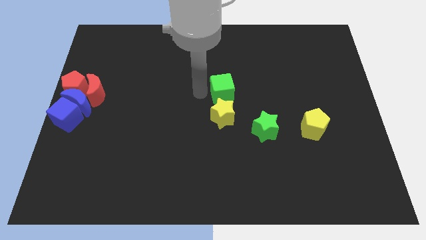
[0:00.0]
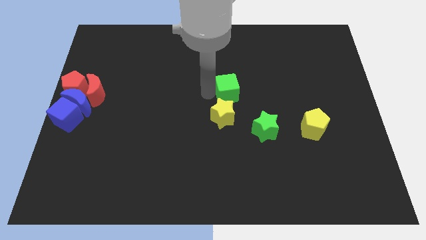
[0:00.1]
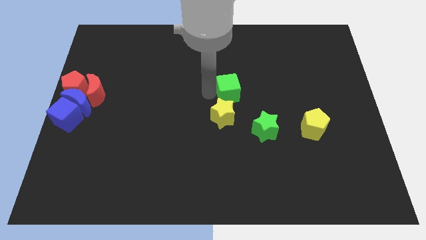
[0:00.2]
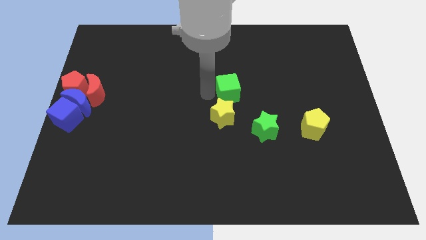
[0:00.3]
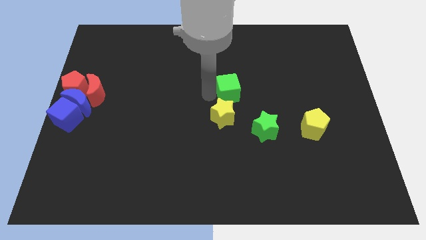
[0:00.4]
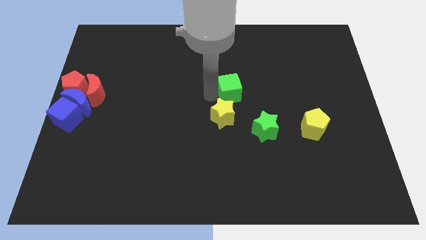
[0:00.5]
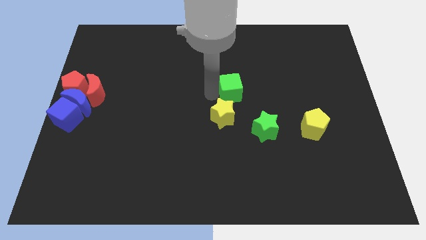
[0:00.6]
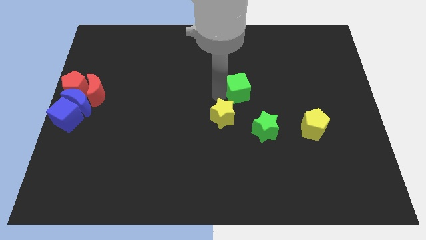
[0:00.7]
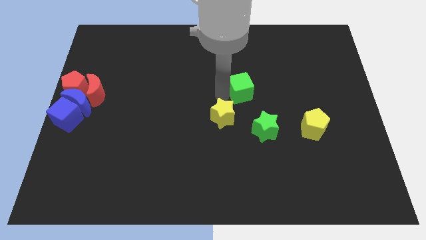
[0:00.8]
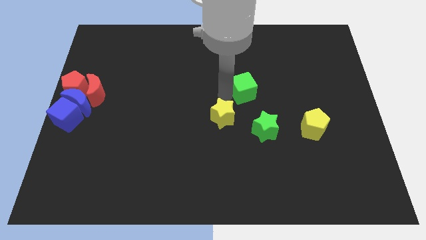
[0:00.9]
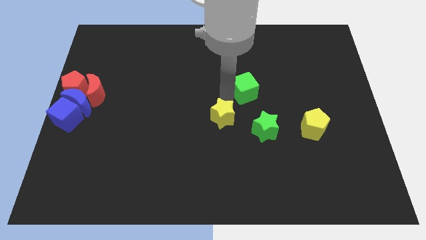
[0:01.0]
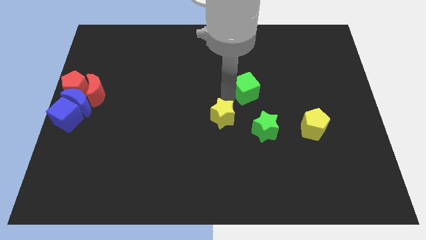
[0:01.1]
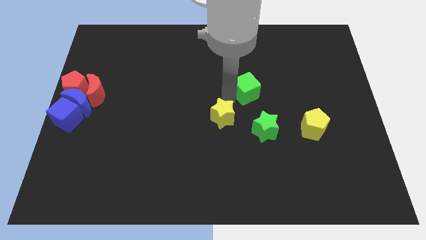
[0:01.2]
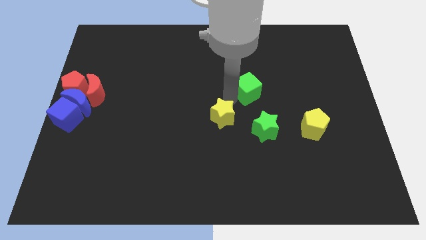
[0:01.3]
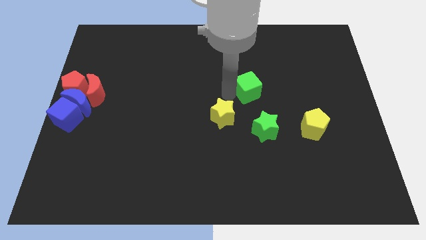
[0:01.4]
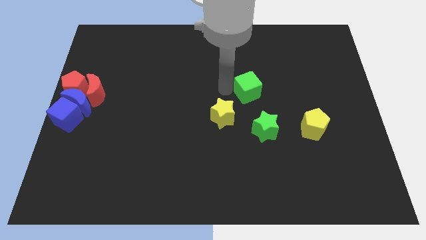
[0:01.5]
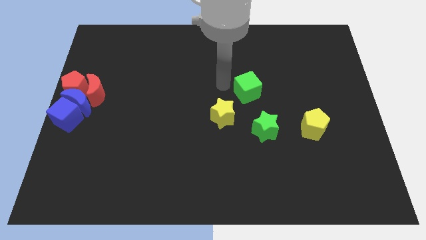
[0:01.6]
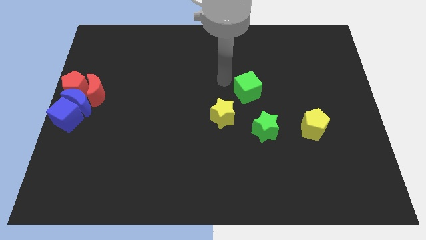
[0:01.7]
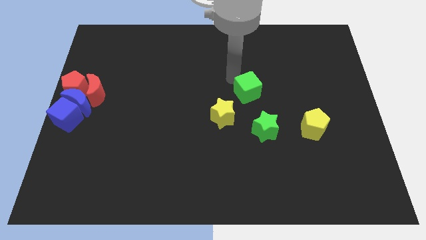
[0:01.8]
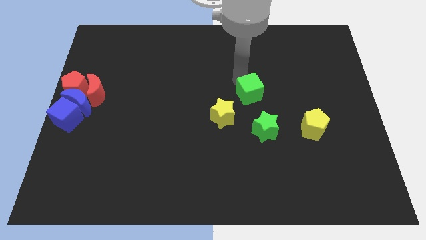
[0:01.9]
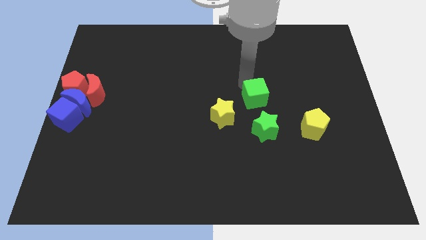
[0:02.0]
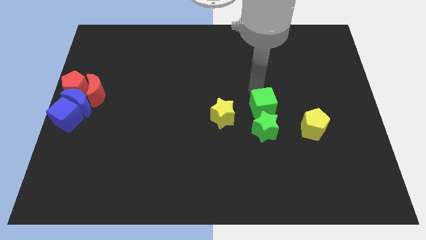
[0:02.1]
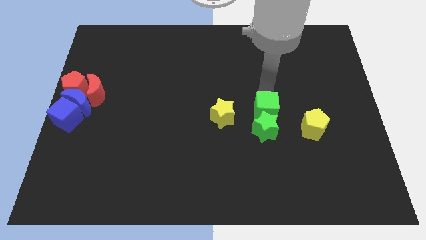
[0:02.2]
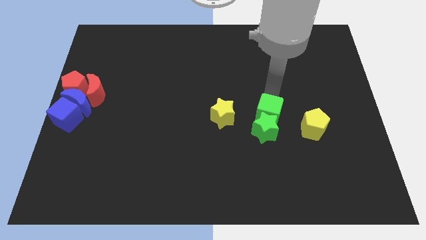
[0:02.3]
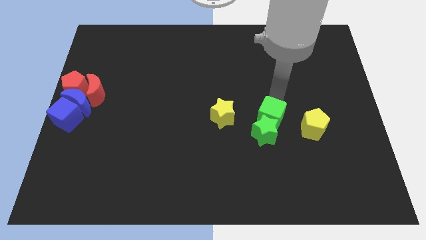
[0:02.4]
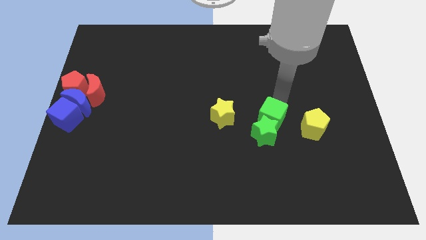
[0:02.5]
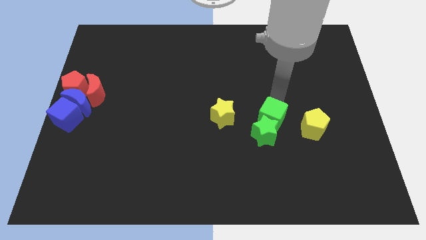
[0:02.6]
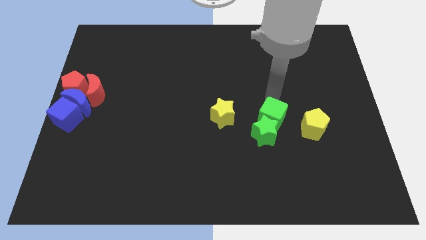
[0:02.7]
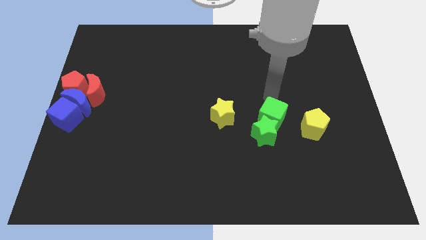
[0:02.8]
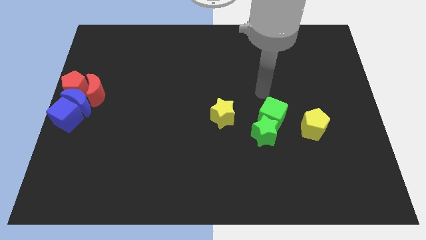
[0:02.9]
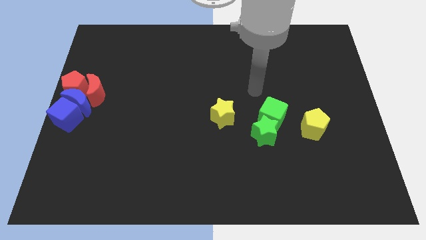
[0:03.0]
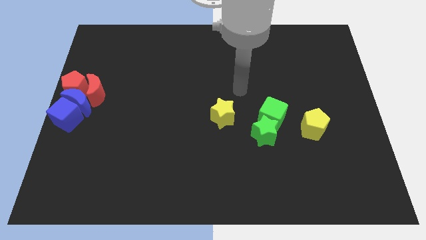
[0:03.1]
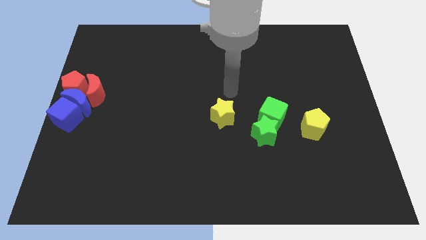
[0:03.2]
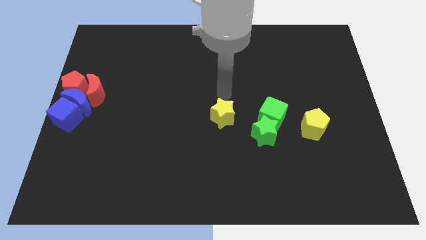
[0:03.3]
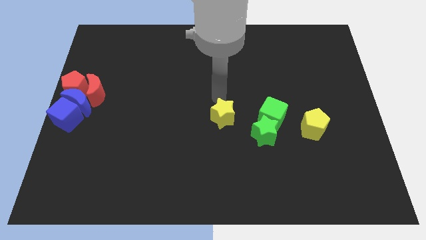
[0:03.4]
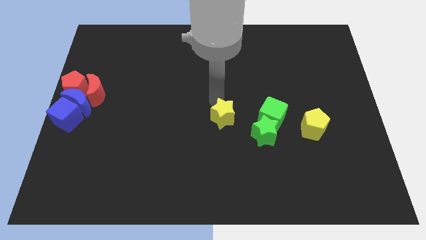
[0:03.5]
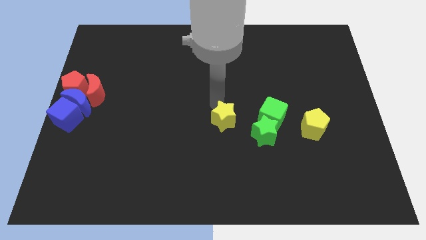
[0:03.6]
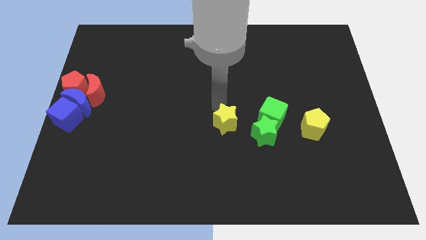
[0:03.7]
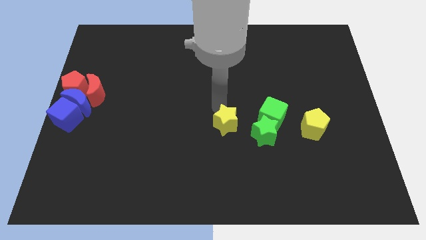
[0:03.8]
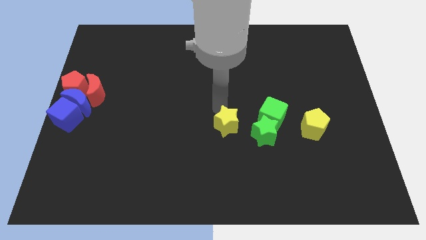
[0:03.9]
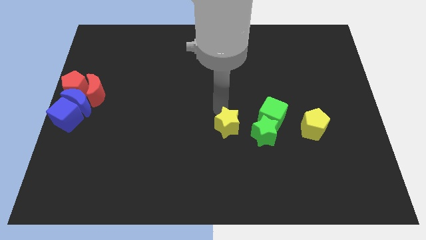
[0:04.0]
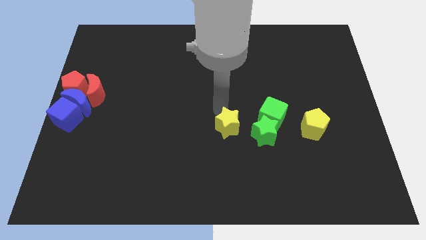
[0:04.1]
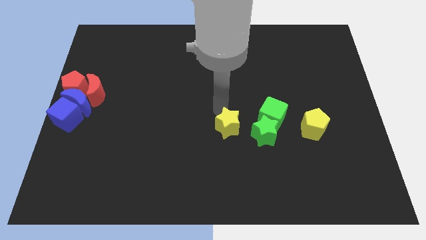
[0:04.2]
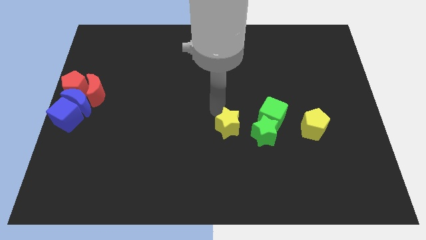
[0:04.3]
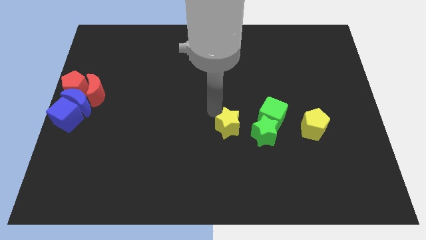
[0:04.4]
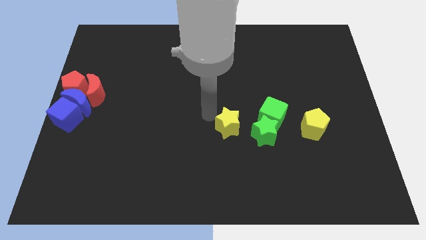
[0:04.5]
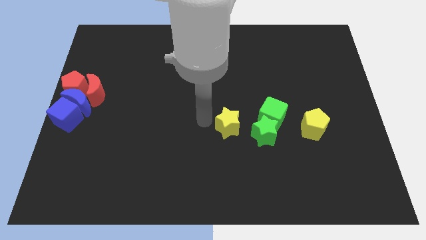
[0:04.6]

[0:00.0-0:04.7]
place green cube at the top right of green star

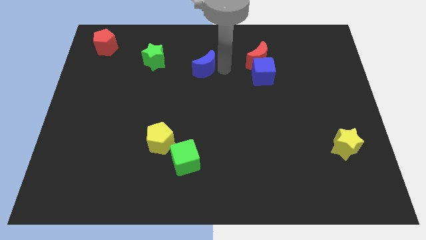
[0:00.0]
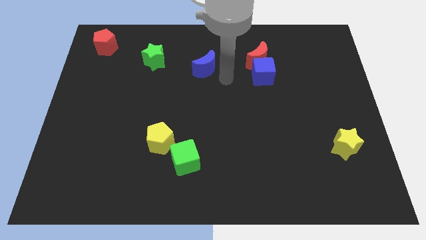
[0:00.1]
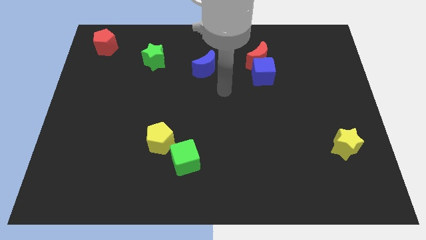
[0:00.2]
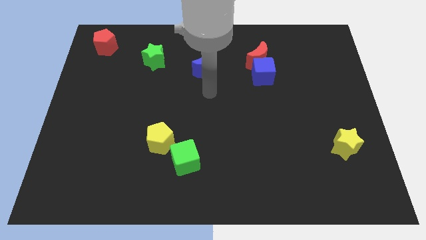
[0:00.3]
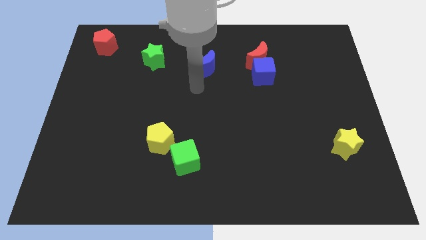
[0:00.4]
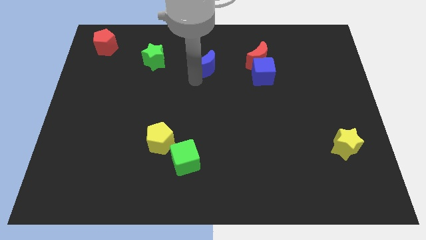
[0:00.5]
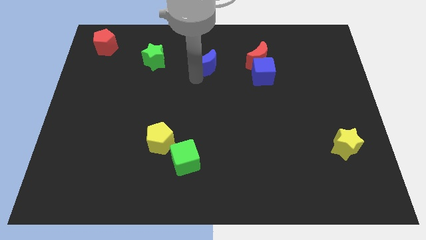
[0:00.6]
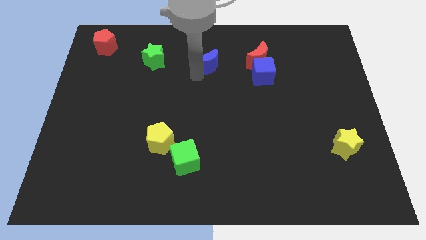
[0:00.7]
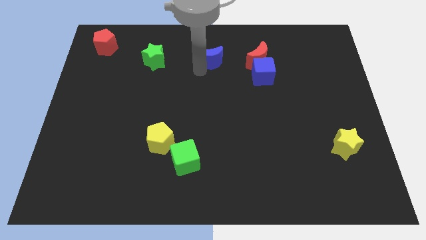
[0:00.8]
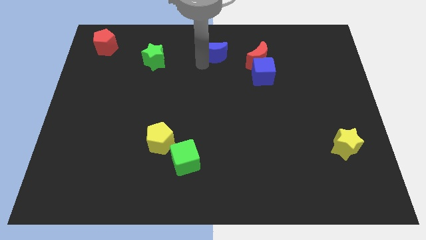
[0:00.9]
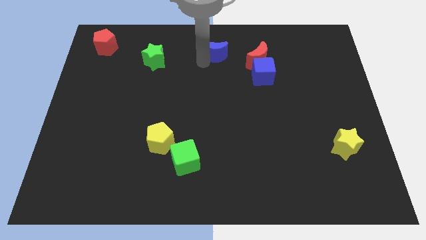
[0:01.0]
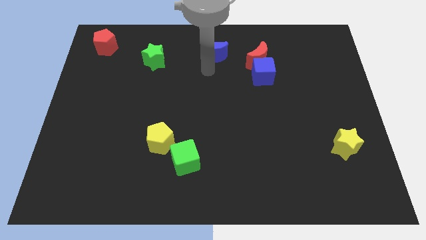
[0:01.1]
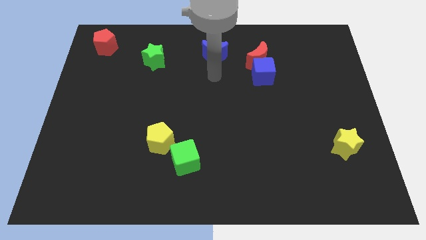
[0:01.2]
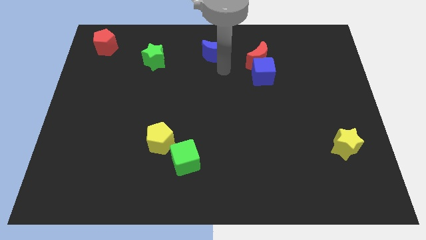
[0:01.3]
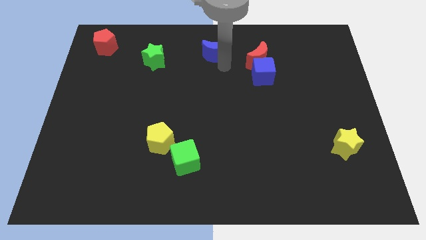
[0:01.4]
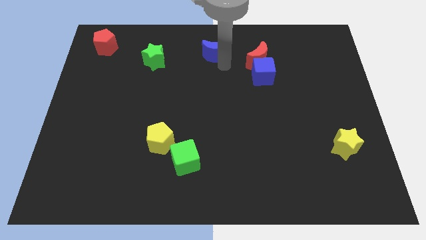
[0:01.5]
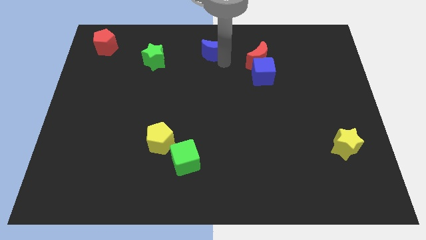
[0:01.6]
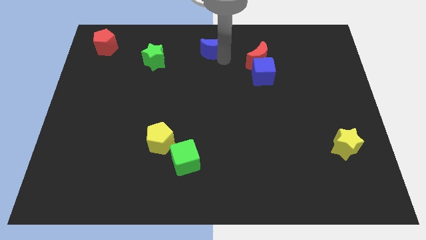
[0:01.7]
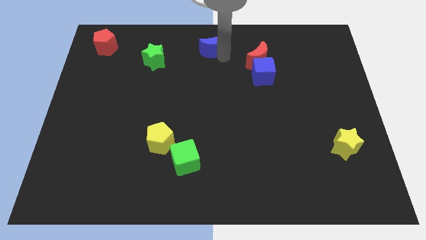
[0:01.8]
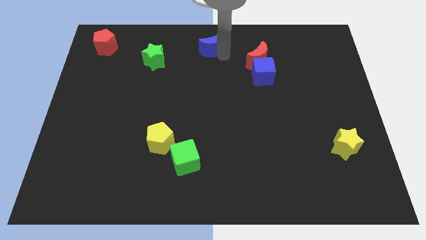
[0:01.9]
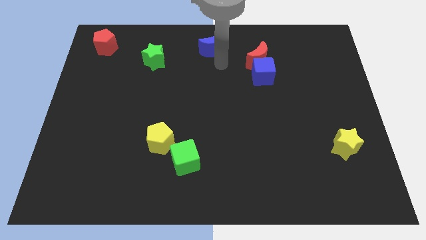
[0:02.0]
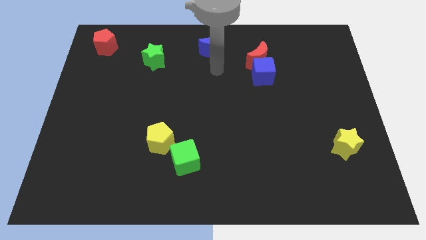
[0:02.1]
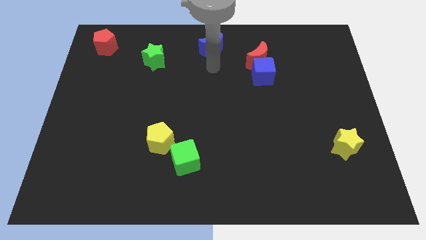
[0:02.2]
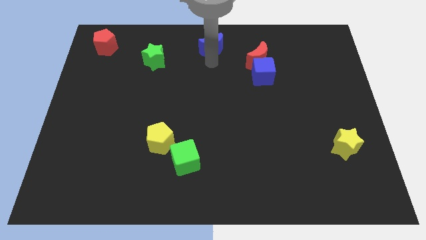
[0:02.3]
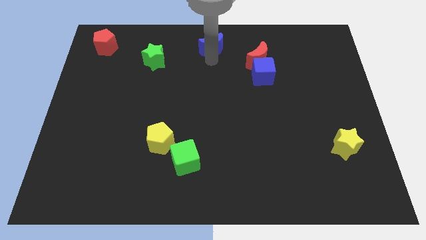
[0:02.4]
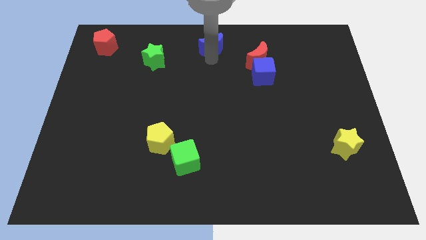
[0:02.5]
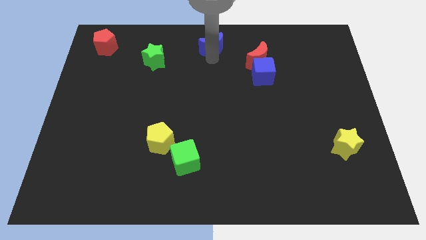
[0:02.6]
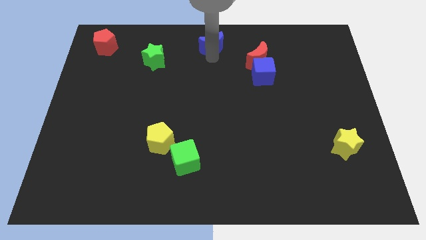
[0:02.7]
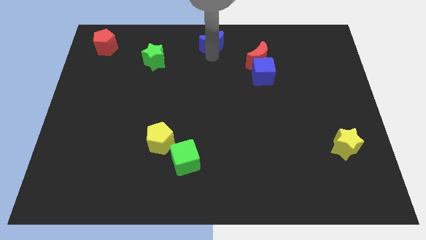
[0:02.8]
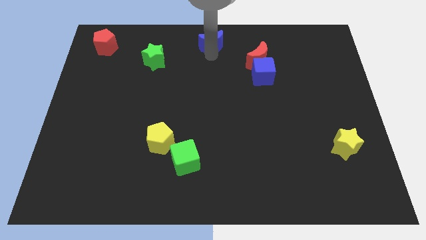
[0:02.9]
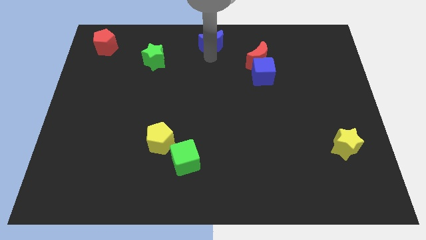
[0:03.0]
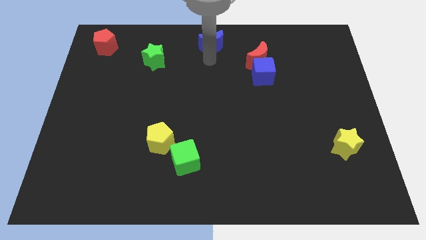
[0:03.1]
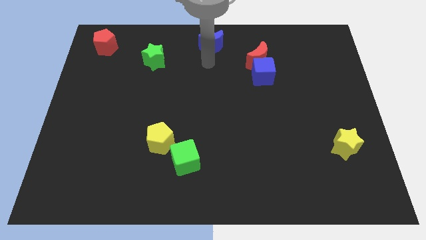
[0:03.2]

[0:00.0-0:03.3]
move the blue crescent to the top center of the board

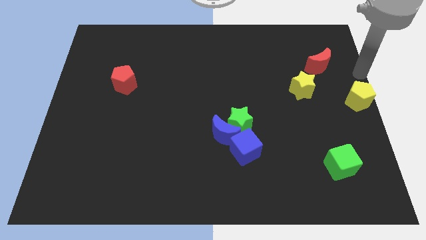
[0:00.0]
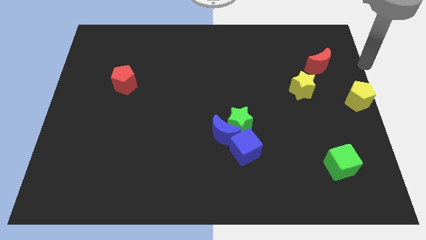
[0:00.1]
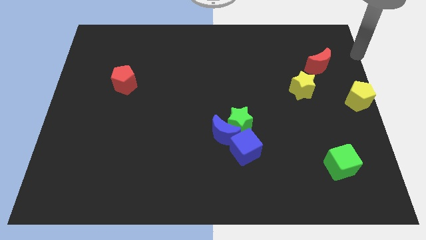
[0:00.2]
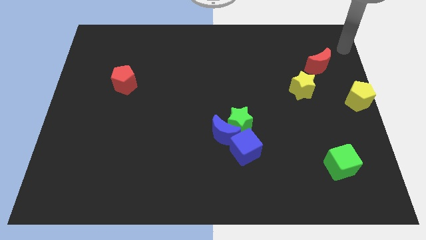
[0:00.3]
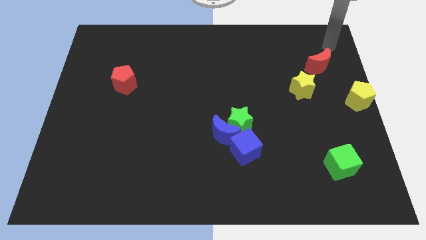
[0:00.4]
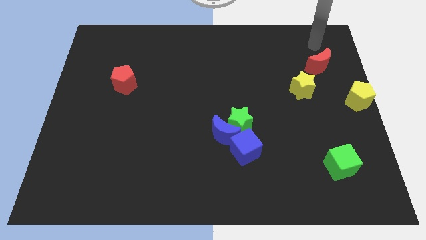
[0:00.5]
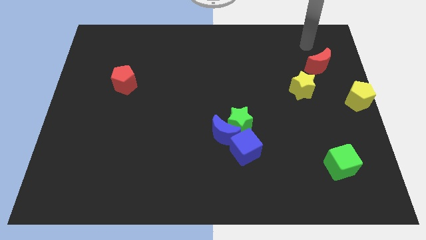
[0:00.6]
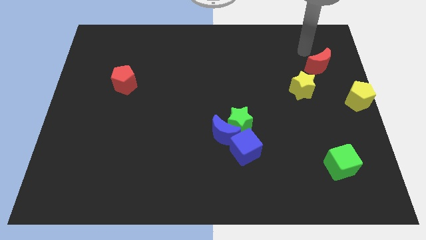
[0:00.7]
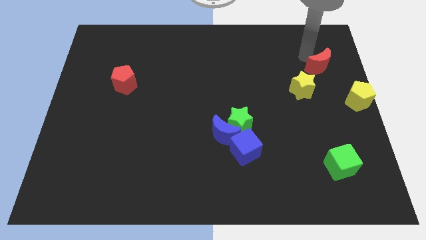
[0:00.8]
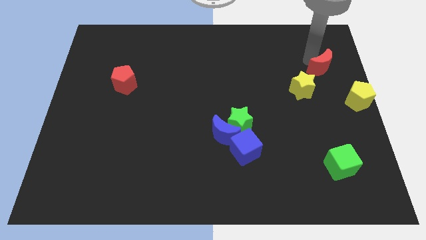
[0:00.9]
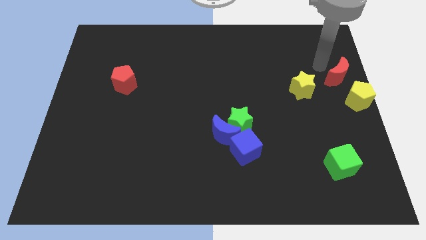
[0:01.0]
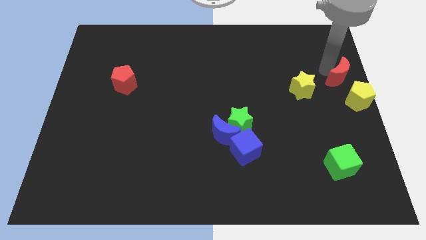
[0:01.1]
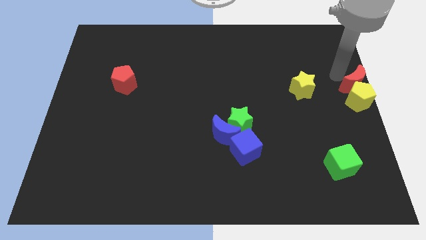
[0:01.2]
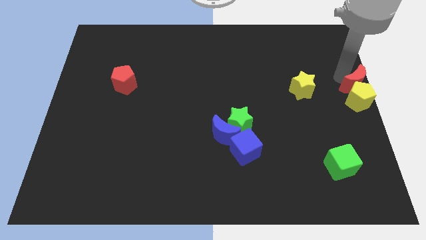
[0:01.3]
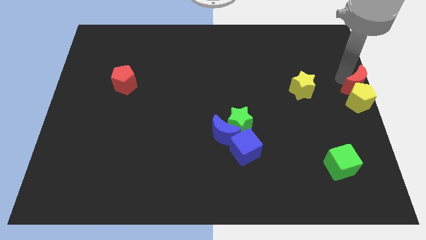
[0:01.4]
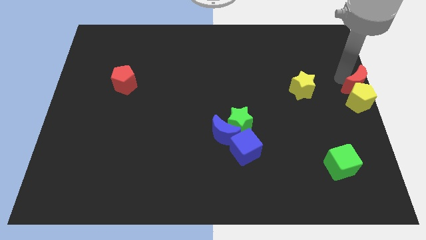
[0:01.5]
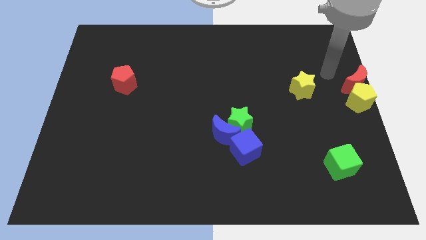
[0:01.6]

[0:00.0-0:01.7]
move the red crescent and yellow pentagon at the right center of the board
